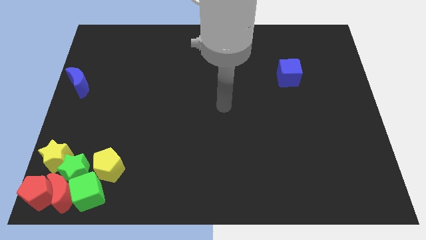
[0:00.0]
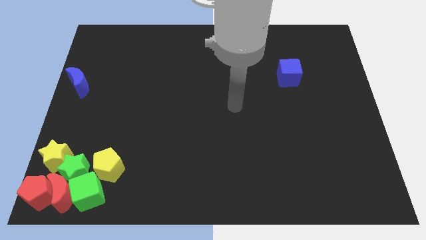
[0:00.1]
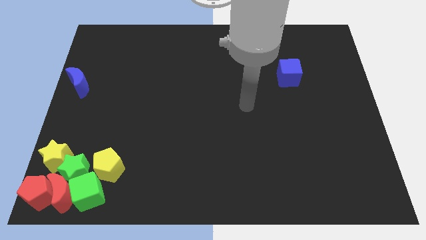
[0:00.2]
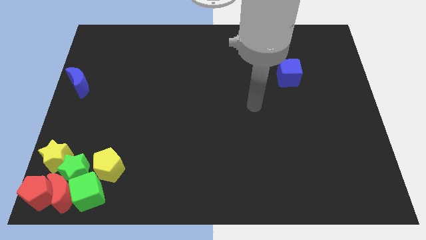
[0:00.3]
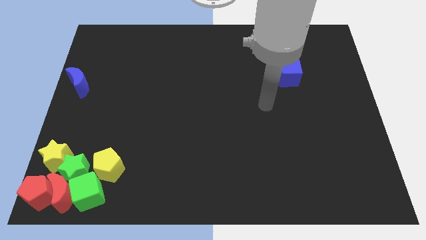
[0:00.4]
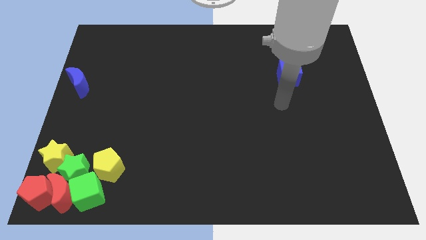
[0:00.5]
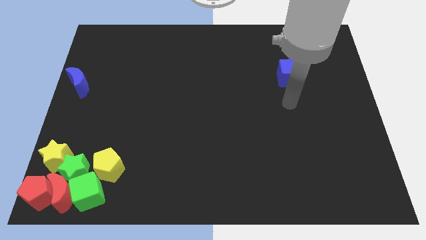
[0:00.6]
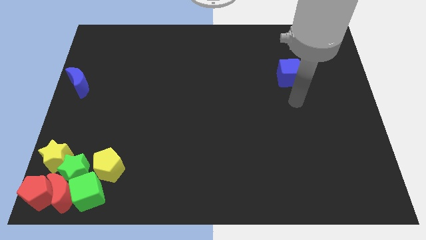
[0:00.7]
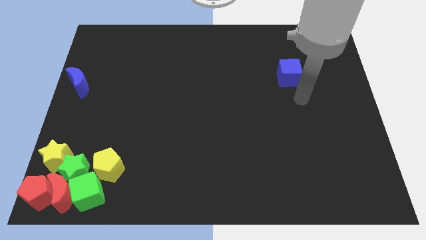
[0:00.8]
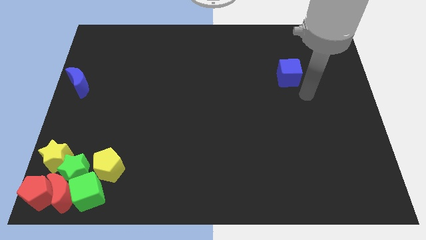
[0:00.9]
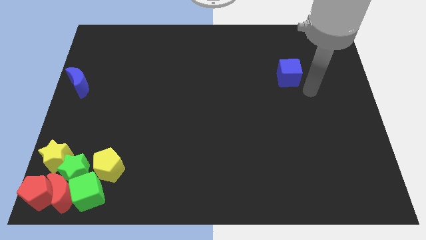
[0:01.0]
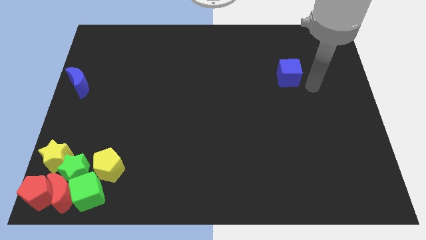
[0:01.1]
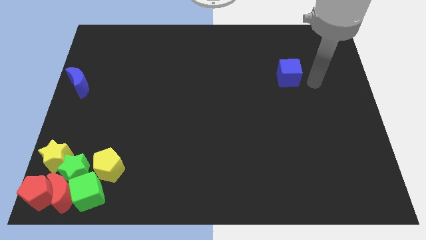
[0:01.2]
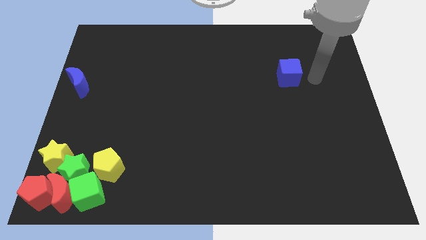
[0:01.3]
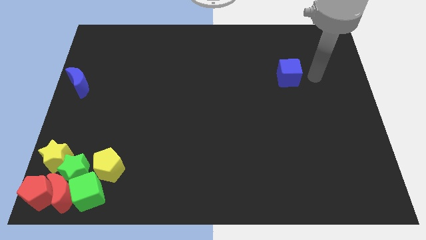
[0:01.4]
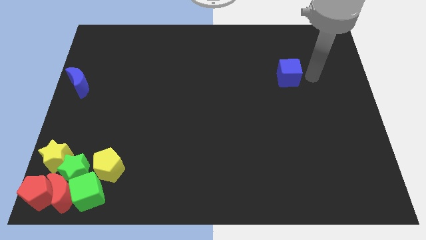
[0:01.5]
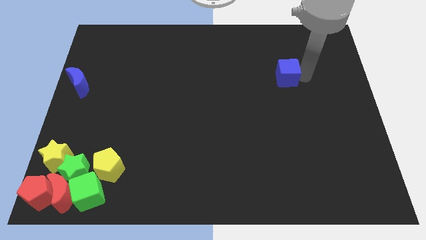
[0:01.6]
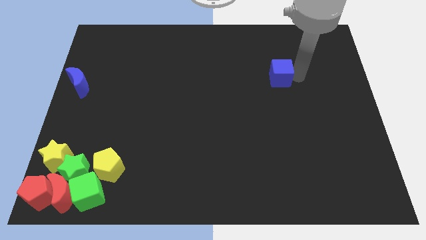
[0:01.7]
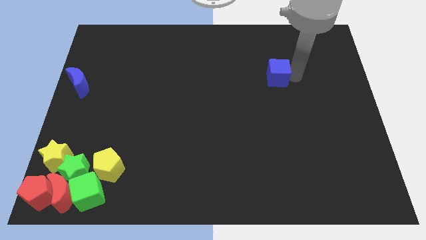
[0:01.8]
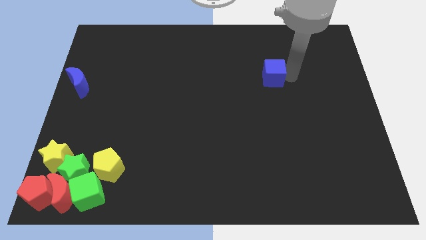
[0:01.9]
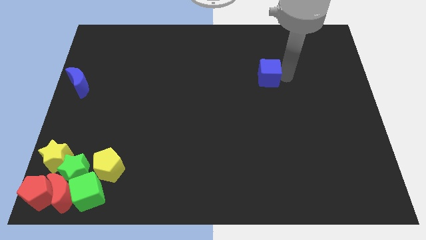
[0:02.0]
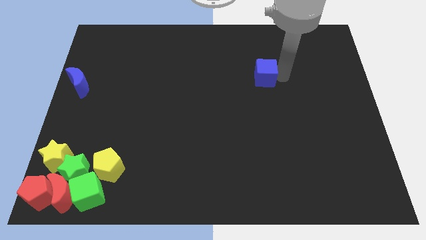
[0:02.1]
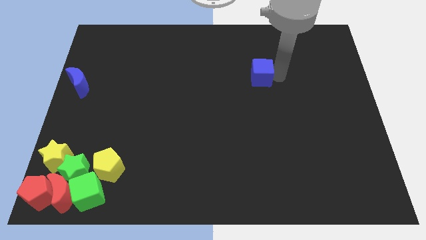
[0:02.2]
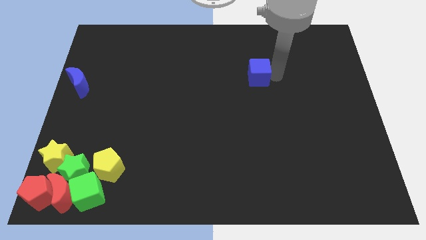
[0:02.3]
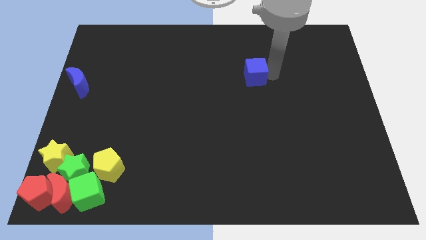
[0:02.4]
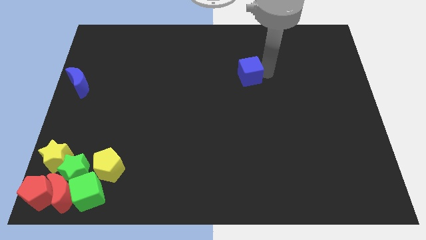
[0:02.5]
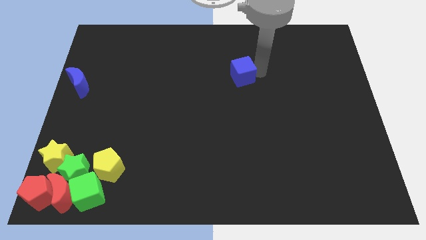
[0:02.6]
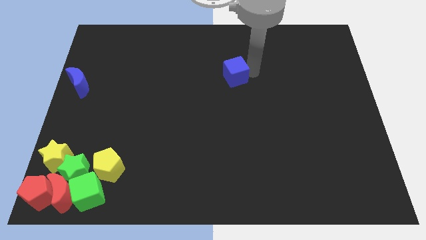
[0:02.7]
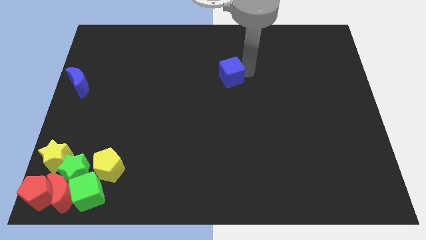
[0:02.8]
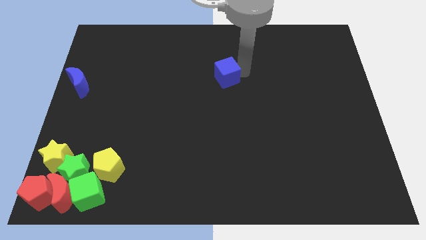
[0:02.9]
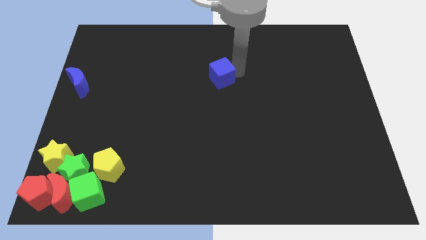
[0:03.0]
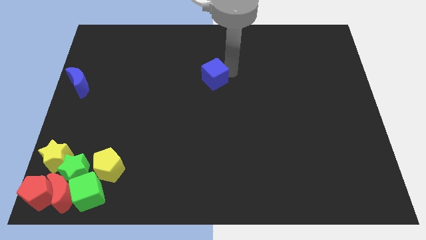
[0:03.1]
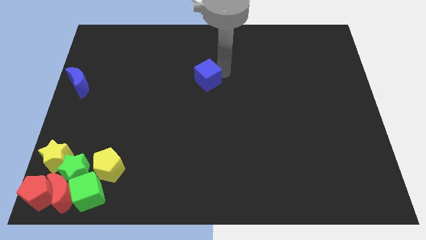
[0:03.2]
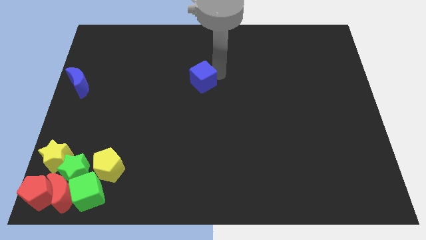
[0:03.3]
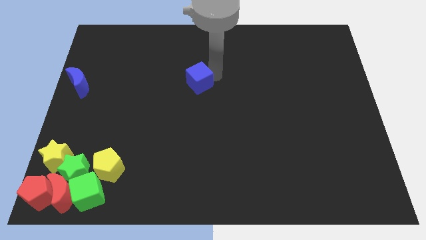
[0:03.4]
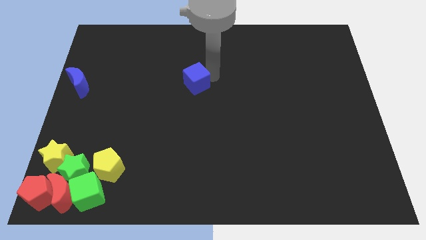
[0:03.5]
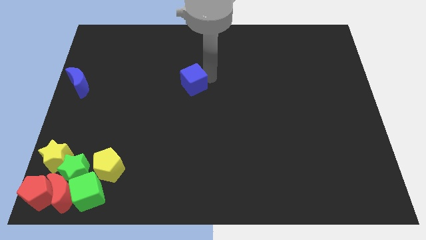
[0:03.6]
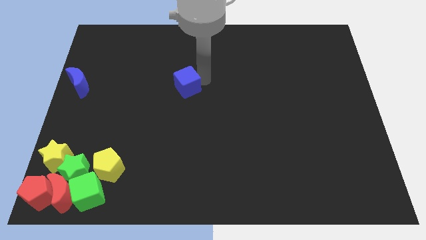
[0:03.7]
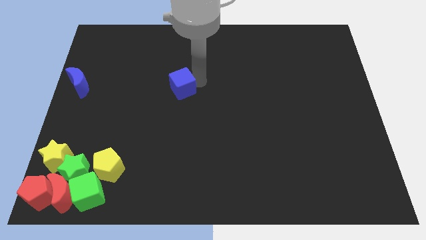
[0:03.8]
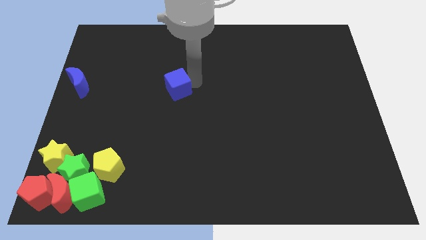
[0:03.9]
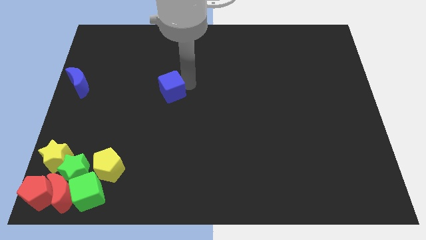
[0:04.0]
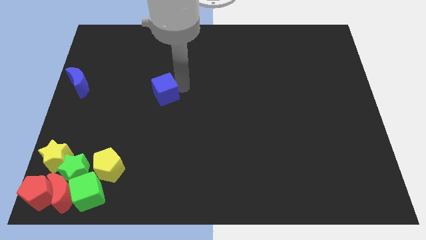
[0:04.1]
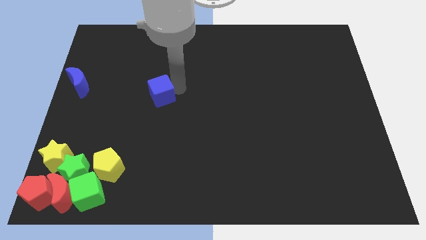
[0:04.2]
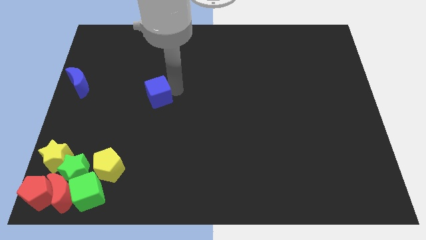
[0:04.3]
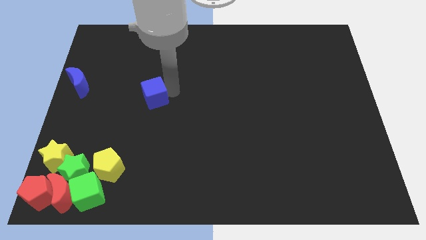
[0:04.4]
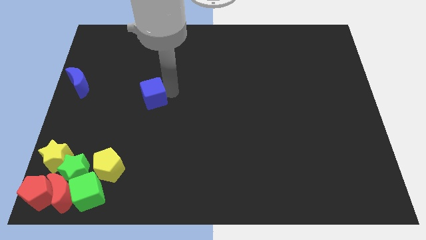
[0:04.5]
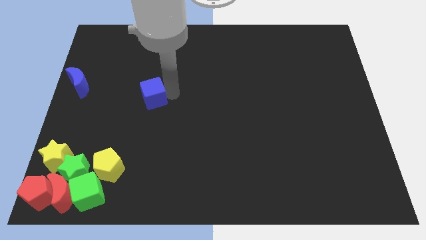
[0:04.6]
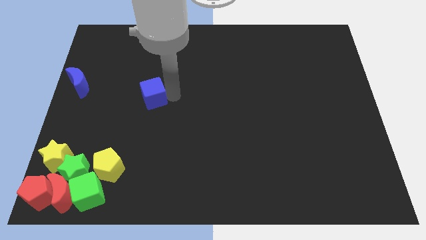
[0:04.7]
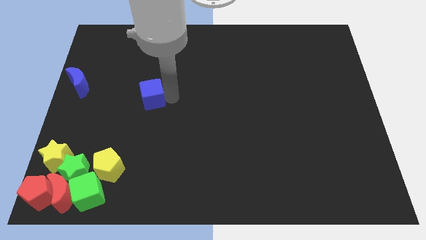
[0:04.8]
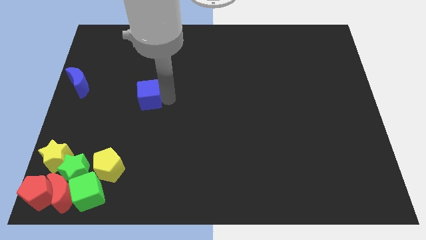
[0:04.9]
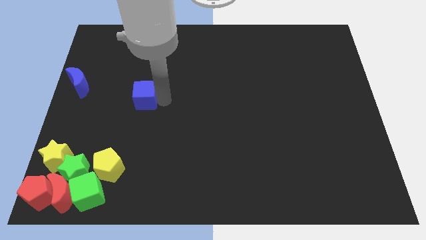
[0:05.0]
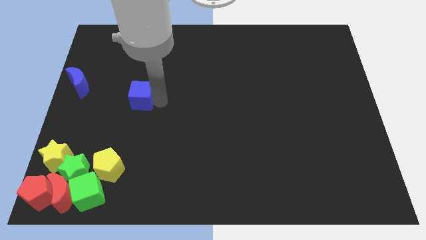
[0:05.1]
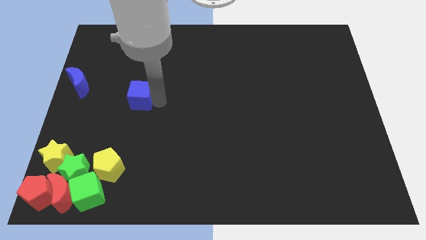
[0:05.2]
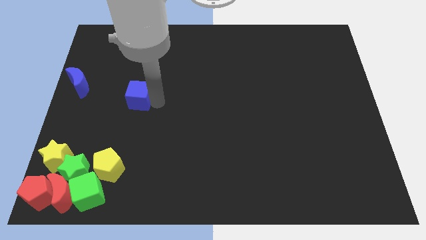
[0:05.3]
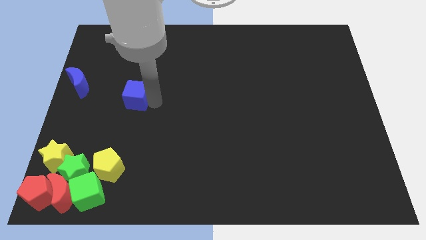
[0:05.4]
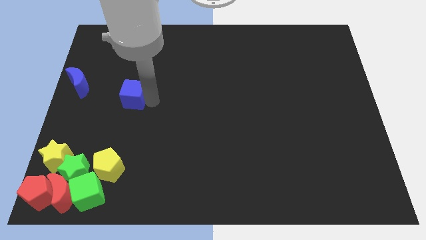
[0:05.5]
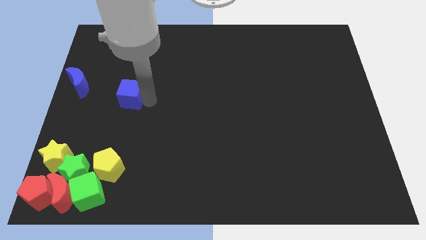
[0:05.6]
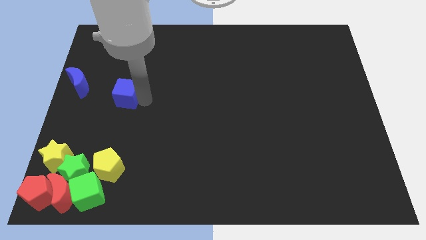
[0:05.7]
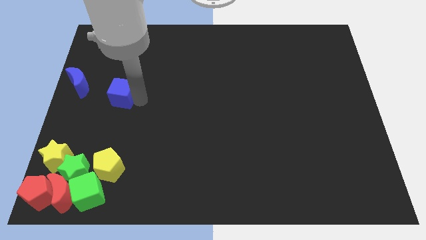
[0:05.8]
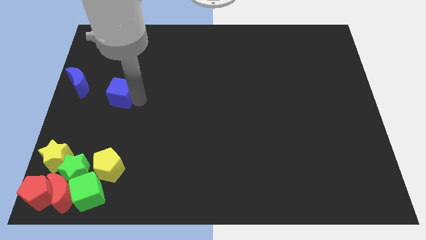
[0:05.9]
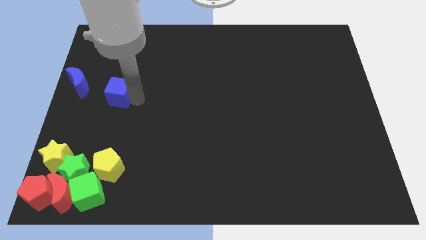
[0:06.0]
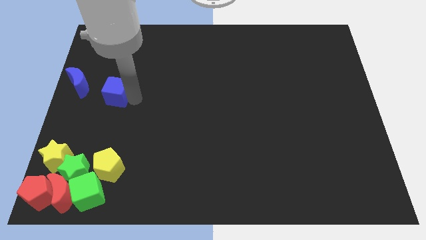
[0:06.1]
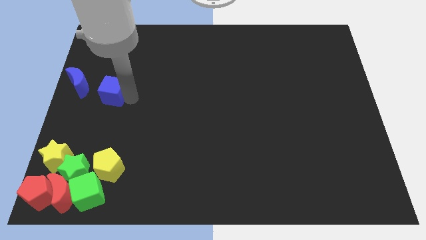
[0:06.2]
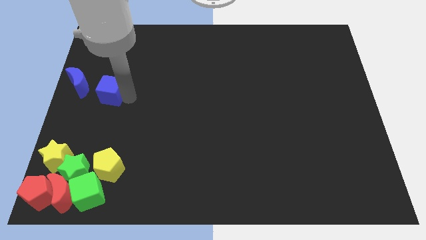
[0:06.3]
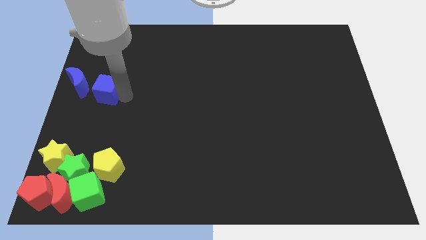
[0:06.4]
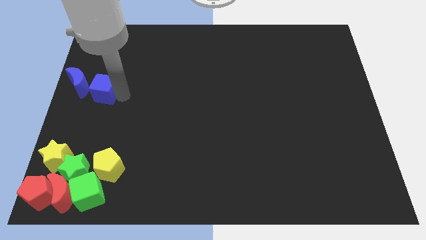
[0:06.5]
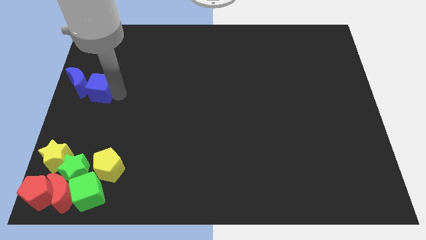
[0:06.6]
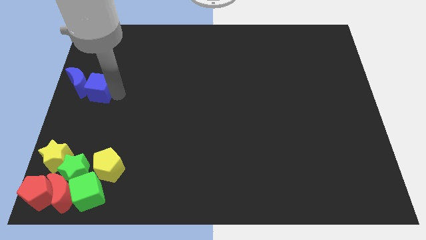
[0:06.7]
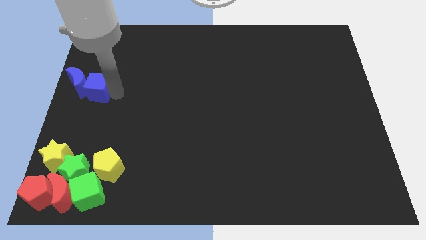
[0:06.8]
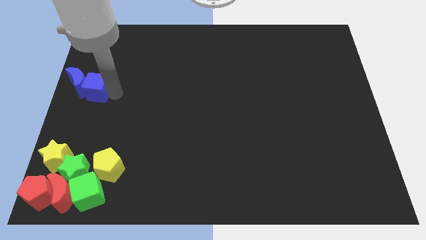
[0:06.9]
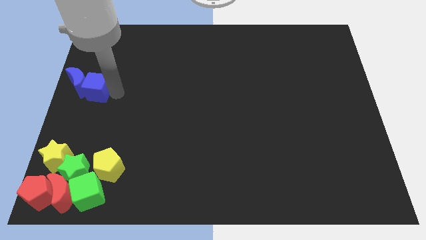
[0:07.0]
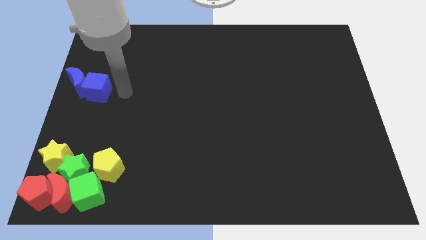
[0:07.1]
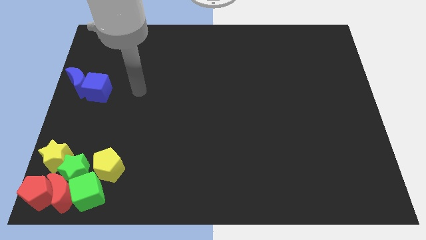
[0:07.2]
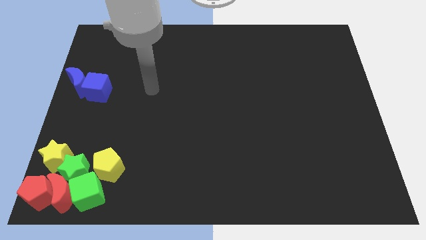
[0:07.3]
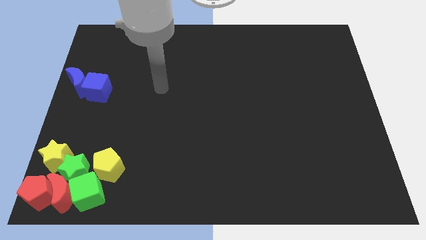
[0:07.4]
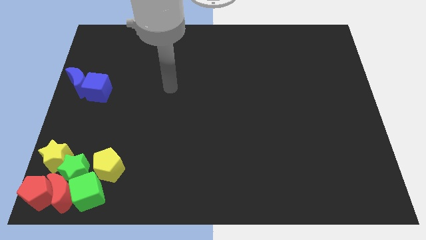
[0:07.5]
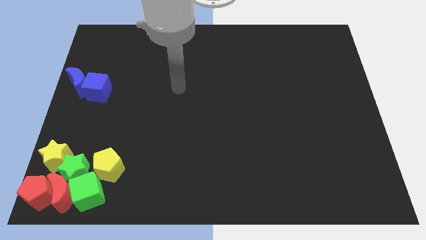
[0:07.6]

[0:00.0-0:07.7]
push the blue cube towards the blue crescent on the left center of the board

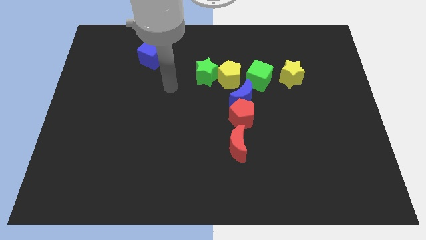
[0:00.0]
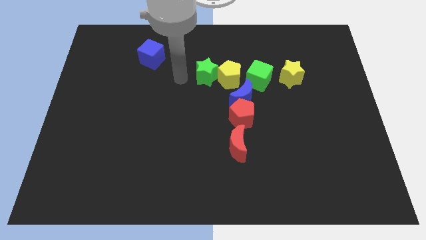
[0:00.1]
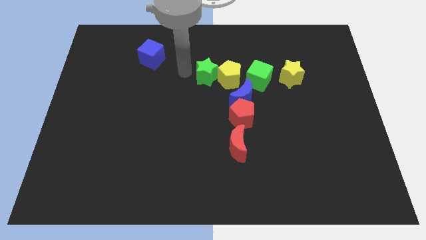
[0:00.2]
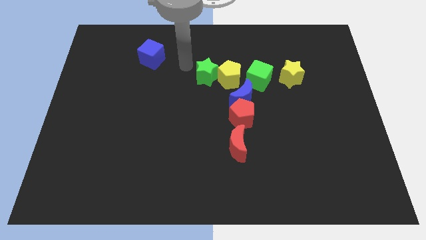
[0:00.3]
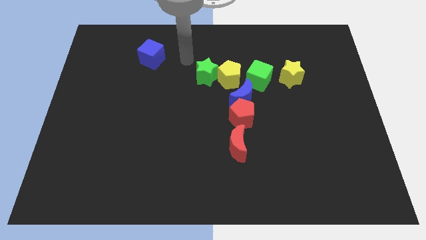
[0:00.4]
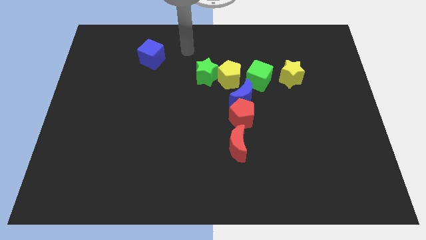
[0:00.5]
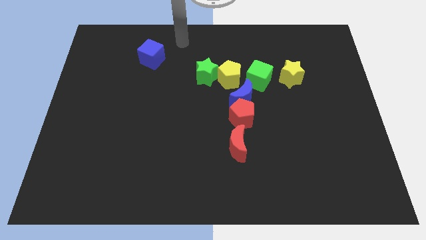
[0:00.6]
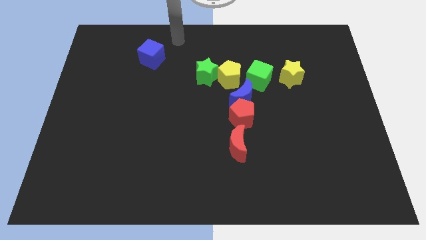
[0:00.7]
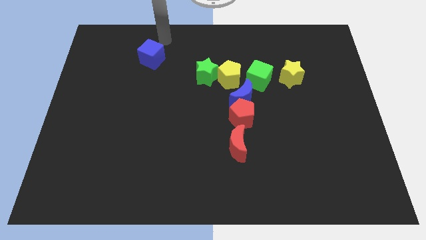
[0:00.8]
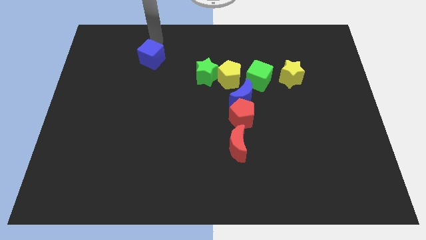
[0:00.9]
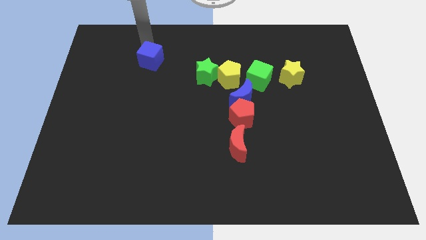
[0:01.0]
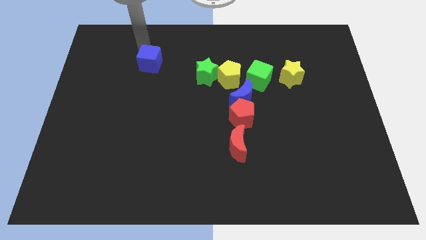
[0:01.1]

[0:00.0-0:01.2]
move the blue cube slightly towards the bottom side
